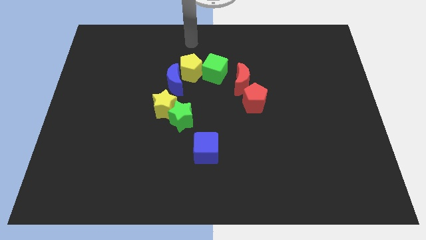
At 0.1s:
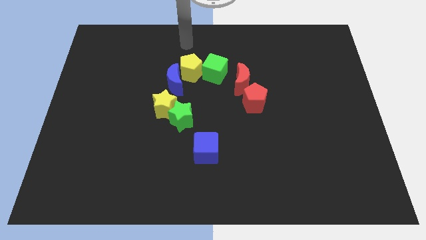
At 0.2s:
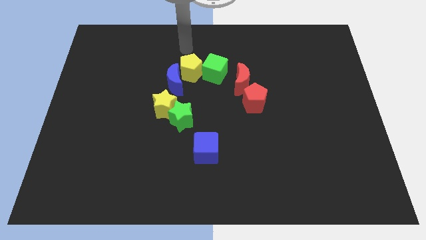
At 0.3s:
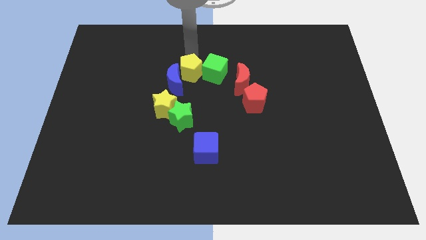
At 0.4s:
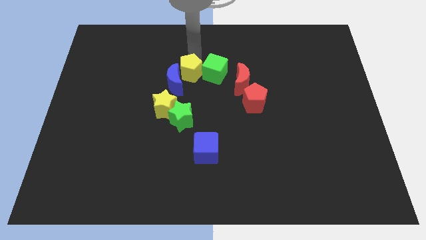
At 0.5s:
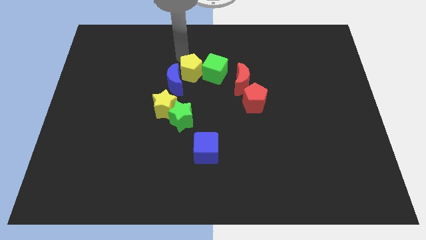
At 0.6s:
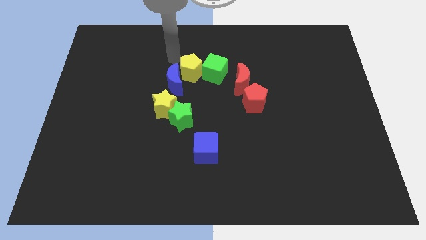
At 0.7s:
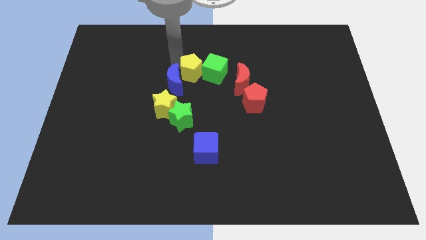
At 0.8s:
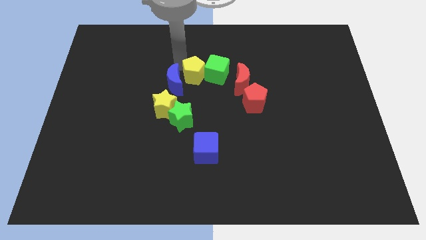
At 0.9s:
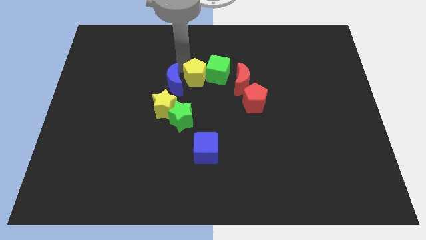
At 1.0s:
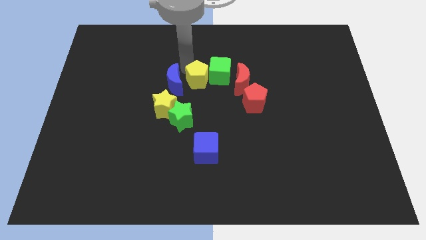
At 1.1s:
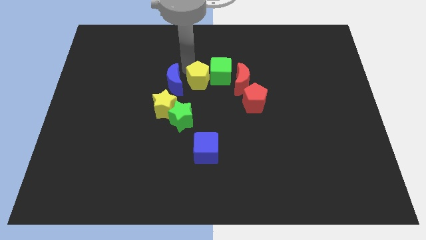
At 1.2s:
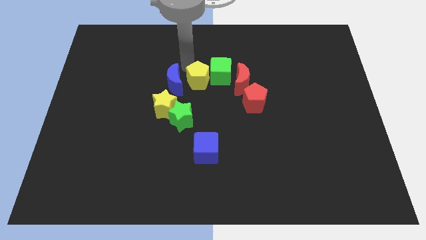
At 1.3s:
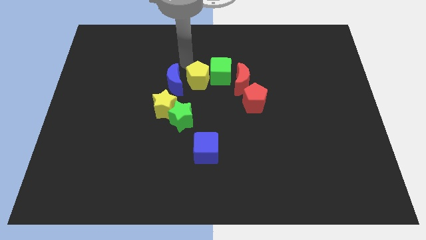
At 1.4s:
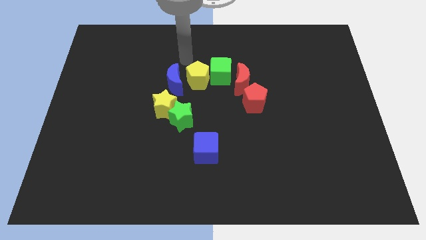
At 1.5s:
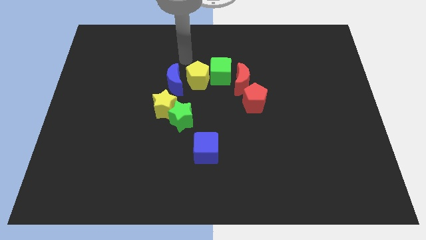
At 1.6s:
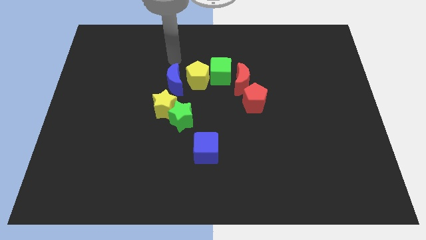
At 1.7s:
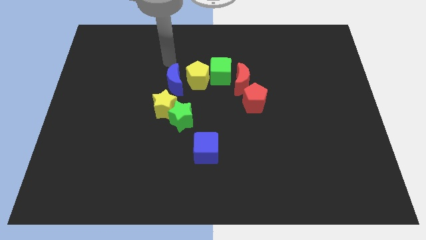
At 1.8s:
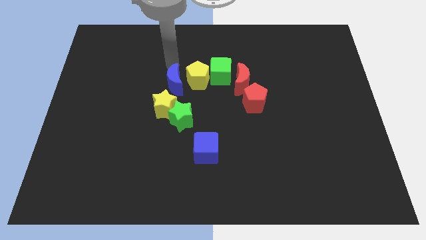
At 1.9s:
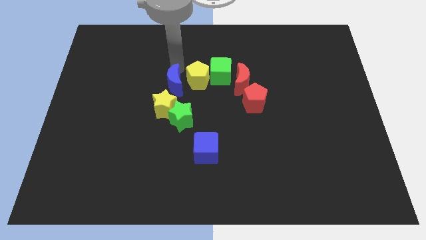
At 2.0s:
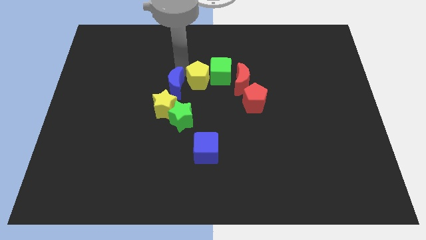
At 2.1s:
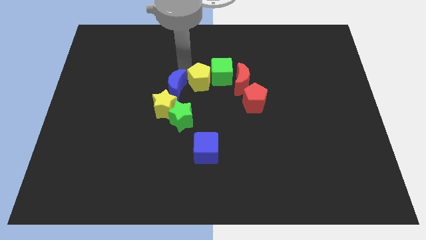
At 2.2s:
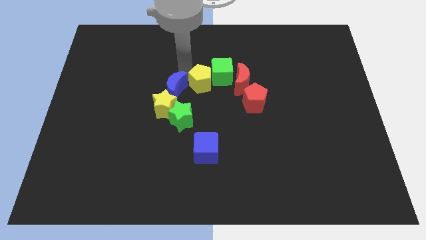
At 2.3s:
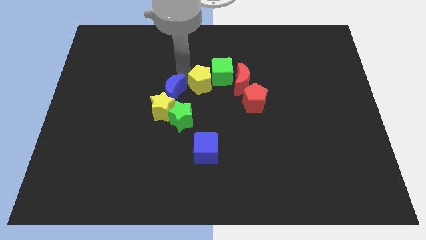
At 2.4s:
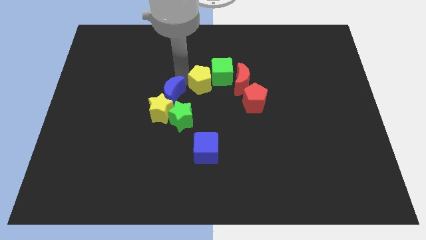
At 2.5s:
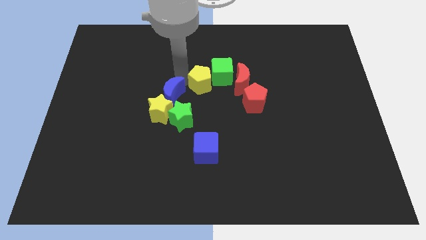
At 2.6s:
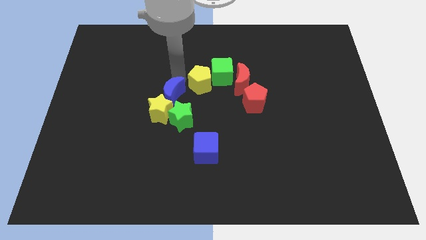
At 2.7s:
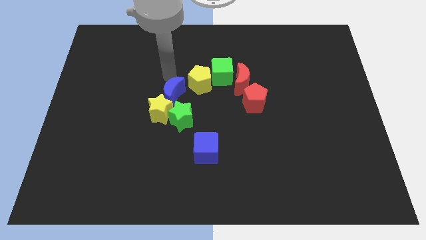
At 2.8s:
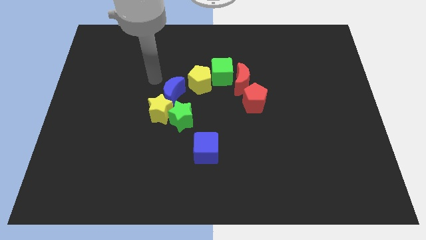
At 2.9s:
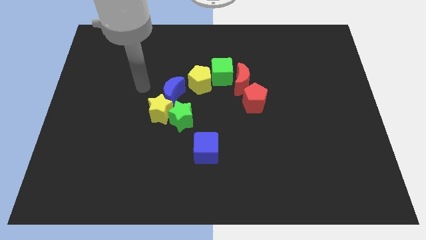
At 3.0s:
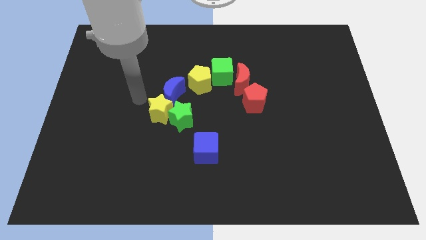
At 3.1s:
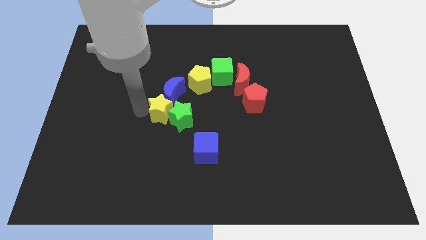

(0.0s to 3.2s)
adjust yellow blocks and a blue moon to form a diagonal line

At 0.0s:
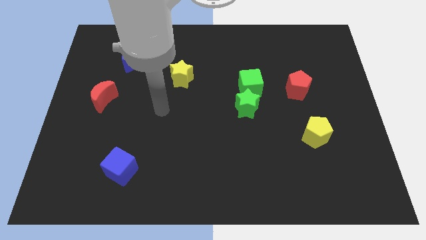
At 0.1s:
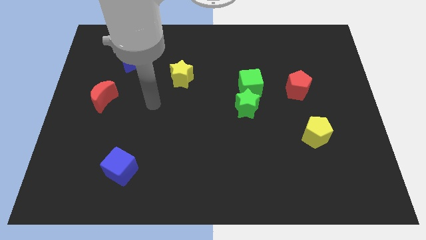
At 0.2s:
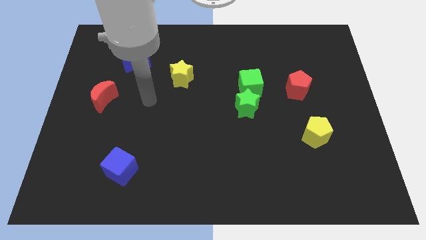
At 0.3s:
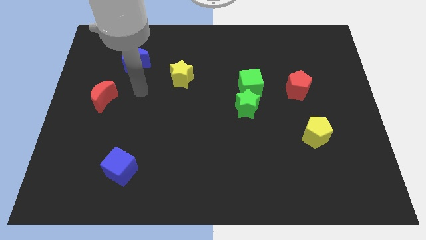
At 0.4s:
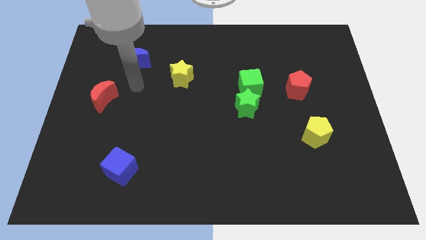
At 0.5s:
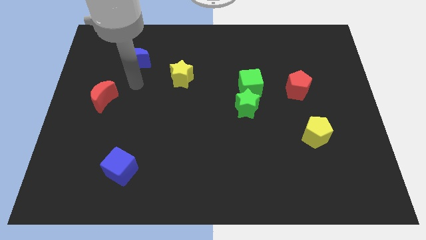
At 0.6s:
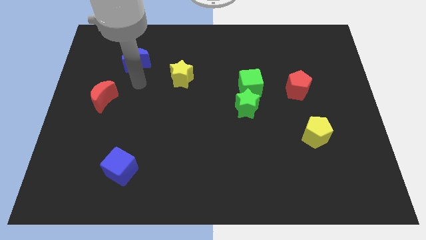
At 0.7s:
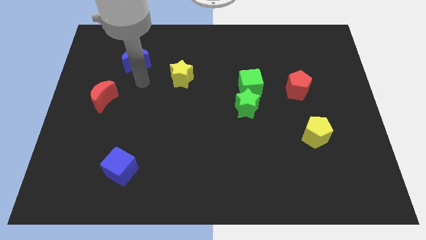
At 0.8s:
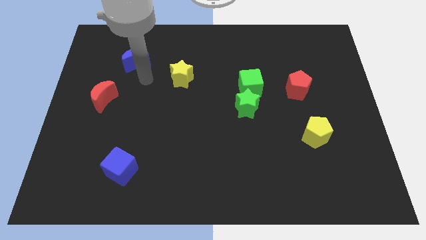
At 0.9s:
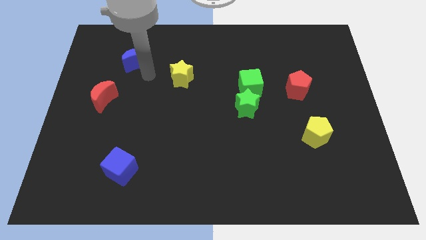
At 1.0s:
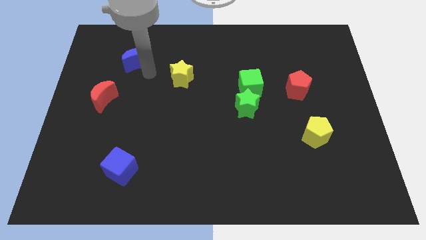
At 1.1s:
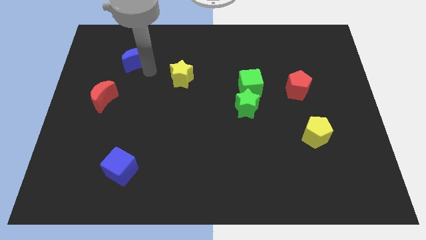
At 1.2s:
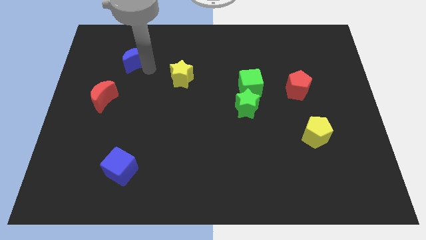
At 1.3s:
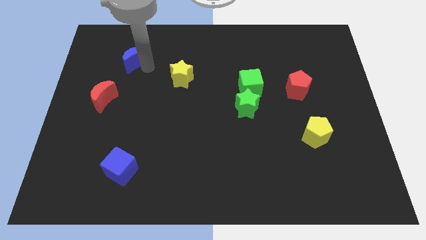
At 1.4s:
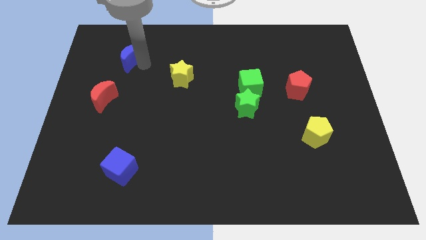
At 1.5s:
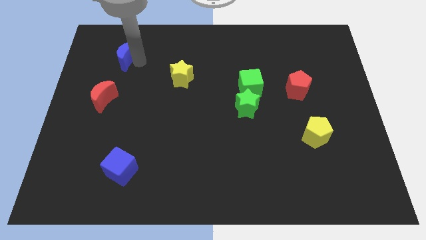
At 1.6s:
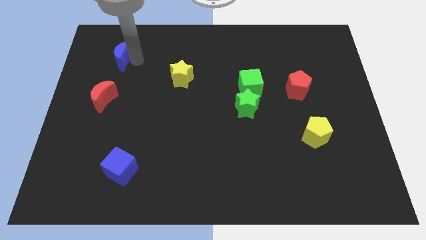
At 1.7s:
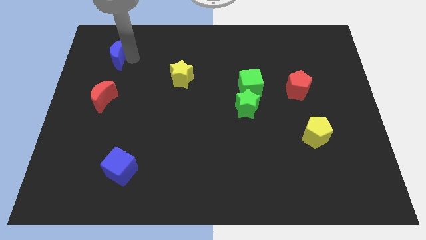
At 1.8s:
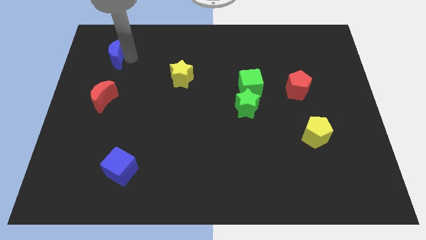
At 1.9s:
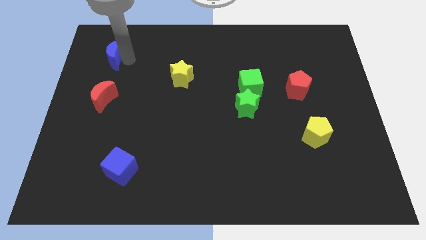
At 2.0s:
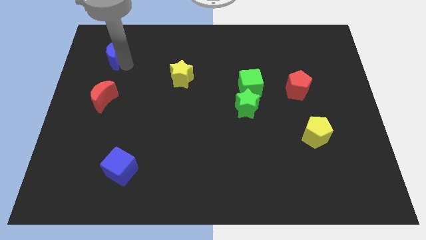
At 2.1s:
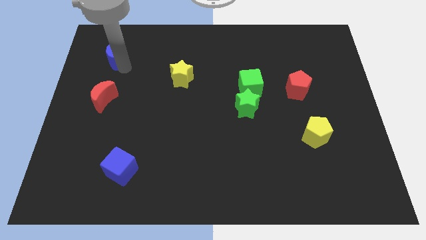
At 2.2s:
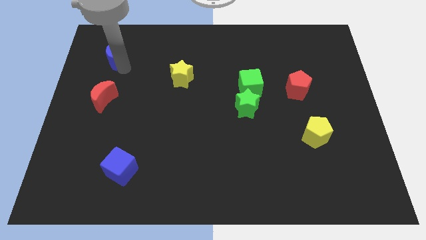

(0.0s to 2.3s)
push the blue crescent to the top of the red crescent

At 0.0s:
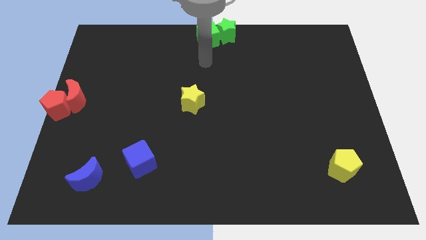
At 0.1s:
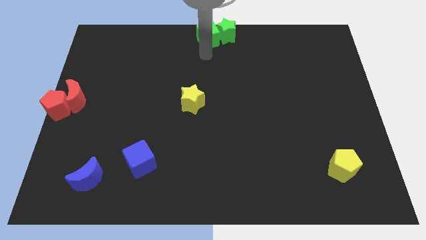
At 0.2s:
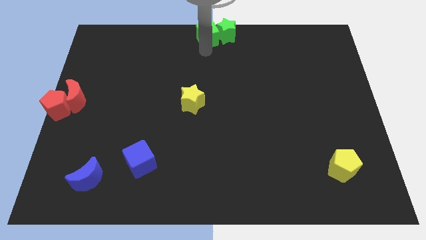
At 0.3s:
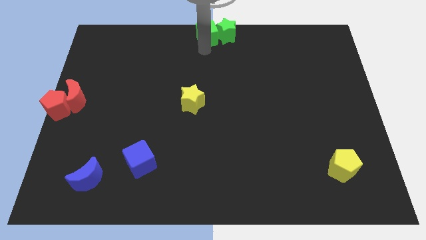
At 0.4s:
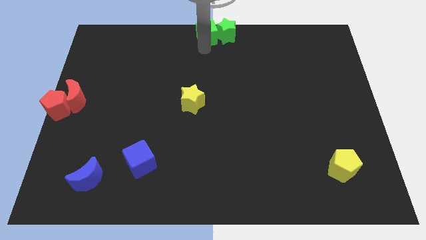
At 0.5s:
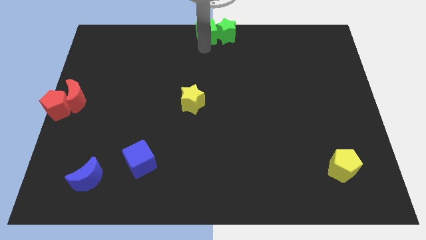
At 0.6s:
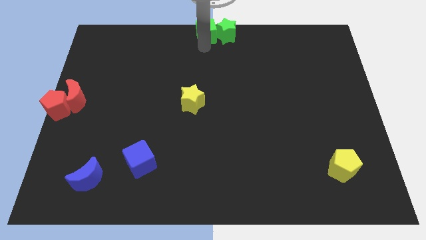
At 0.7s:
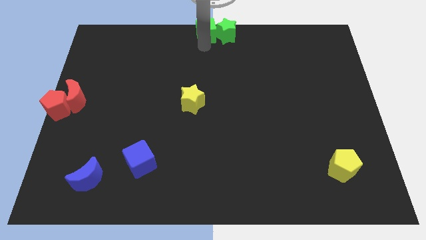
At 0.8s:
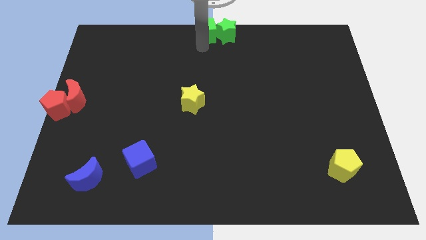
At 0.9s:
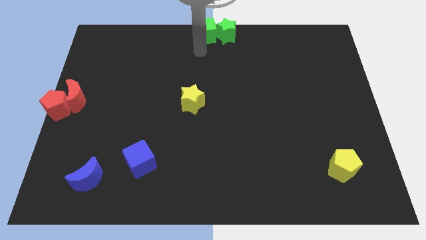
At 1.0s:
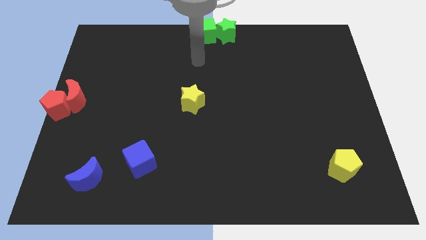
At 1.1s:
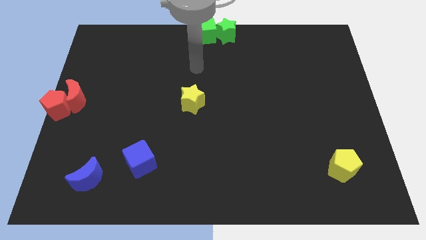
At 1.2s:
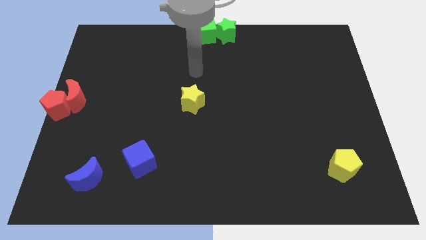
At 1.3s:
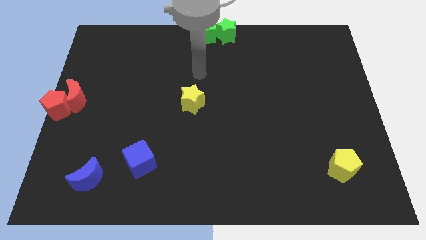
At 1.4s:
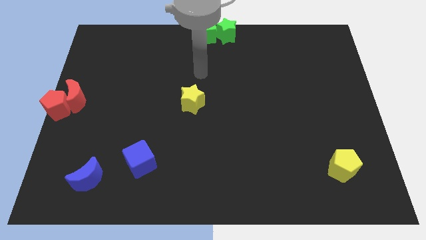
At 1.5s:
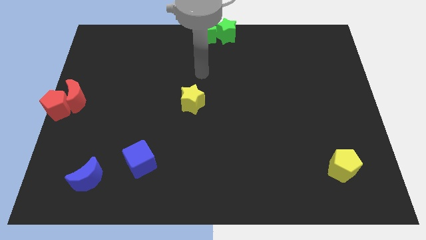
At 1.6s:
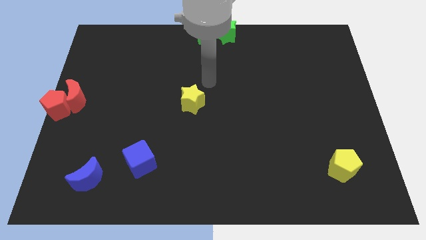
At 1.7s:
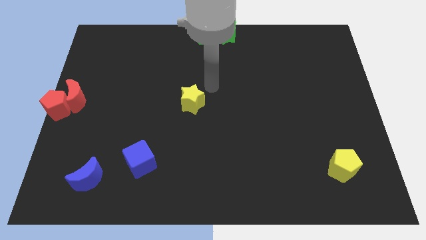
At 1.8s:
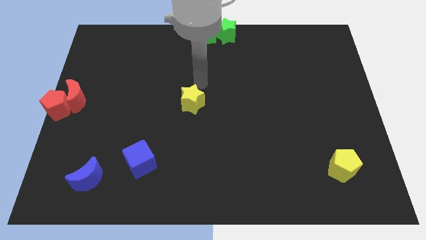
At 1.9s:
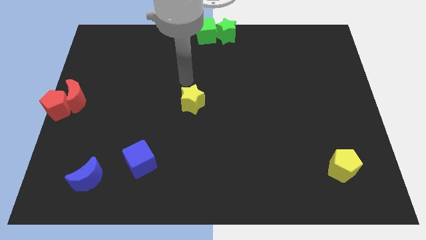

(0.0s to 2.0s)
slightly move the green cube towards the green star

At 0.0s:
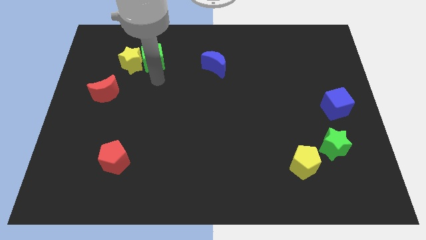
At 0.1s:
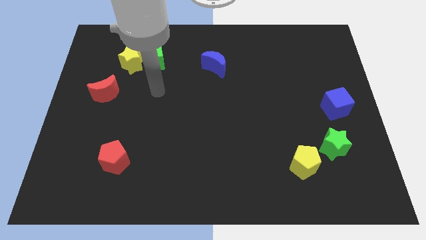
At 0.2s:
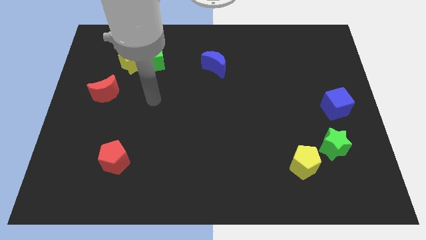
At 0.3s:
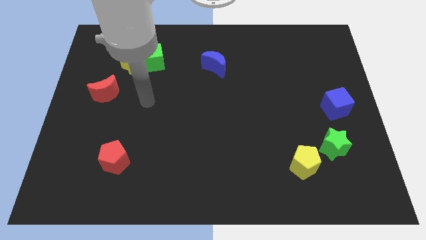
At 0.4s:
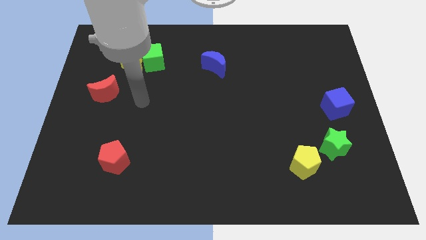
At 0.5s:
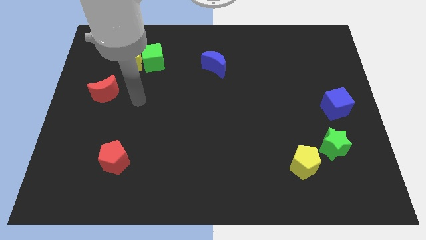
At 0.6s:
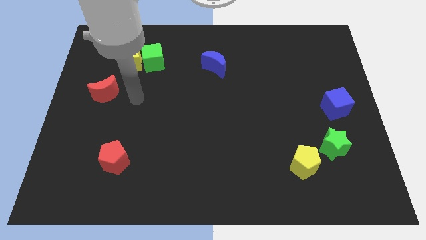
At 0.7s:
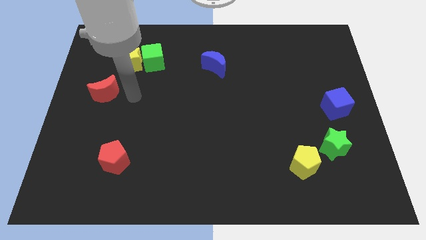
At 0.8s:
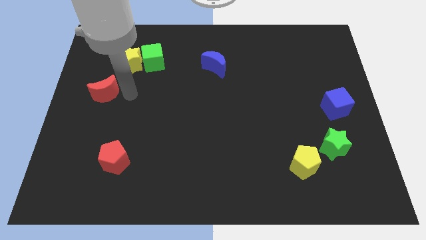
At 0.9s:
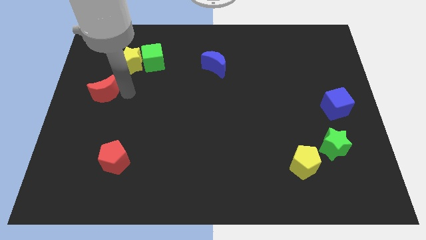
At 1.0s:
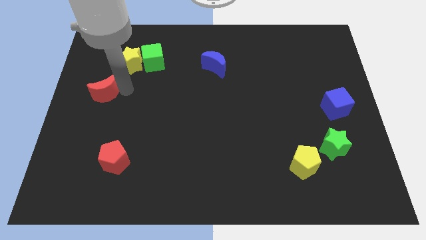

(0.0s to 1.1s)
move your arm away from the green cube

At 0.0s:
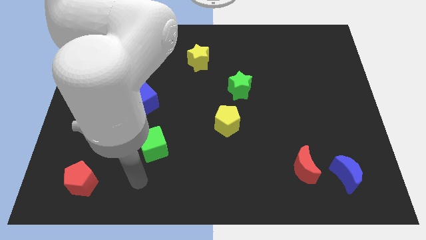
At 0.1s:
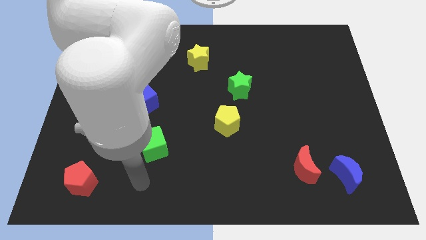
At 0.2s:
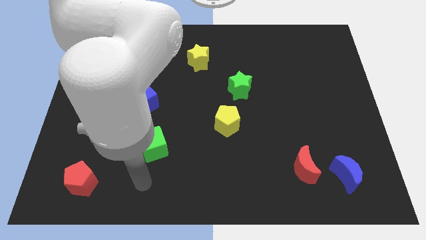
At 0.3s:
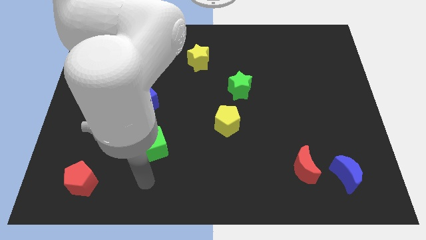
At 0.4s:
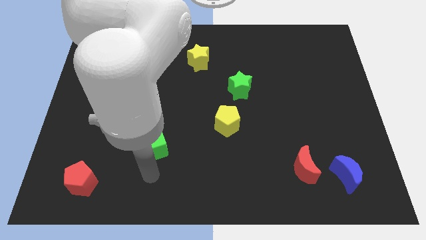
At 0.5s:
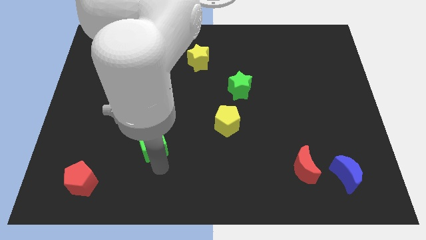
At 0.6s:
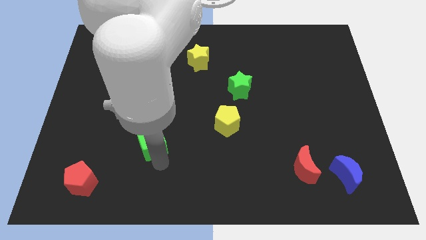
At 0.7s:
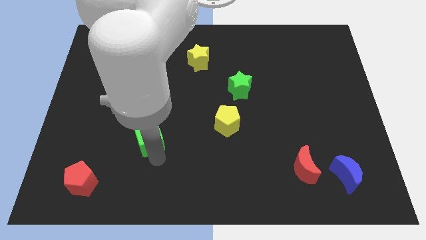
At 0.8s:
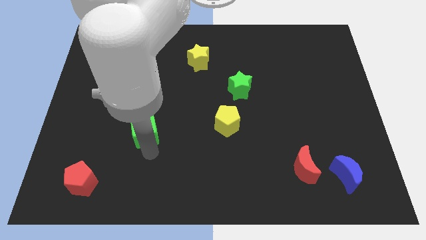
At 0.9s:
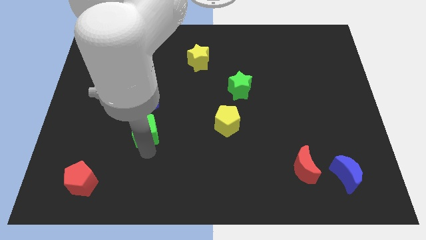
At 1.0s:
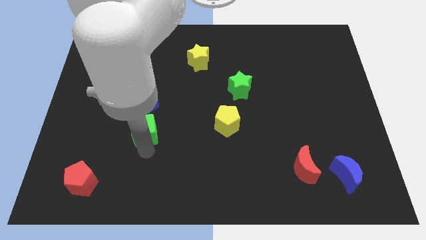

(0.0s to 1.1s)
move green cube towards blue cube
